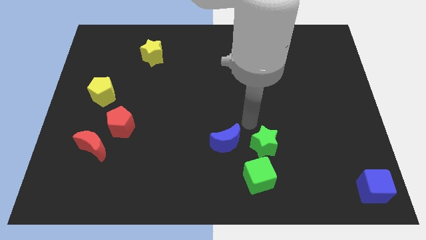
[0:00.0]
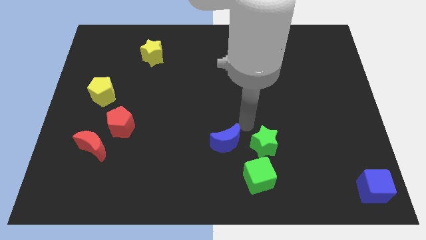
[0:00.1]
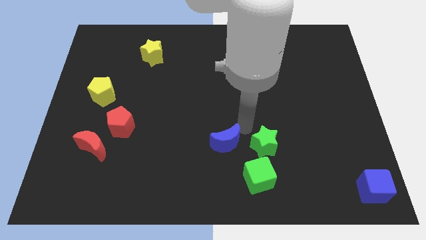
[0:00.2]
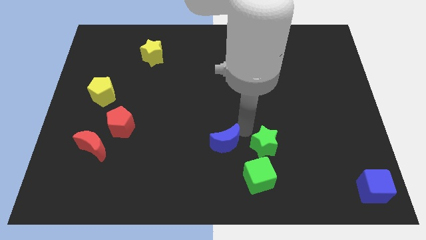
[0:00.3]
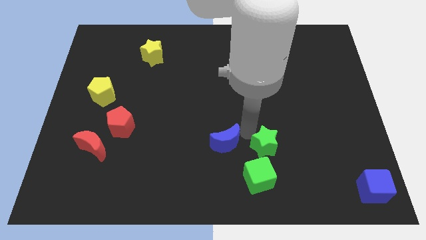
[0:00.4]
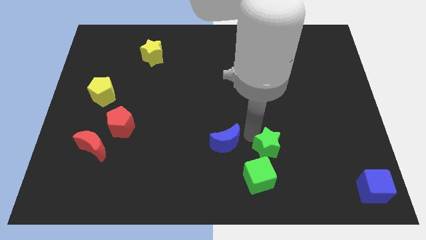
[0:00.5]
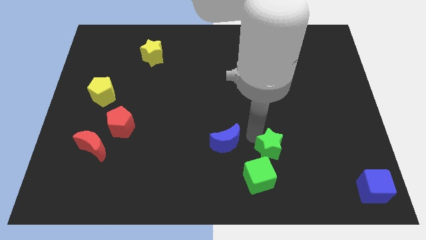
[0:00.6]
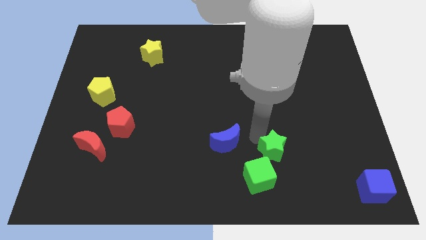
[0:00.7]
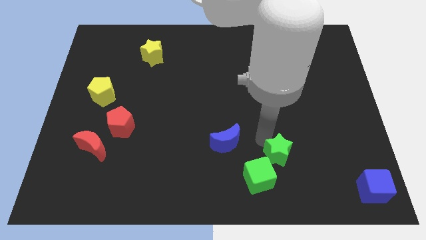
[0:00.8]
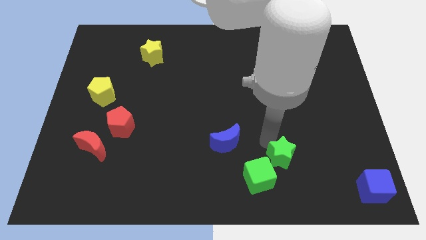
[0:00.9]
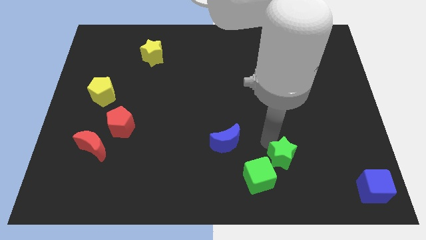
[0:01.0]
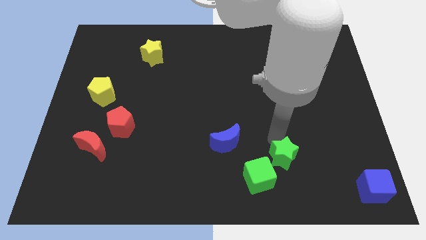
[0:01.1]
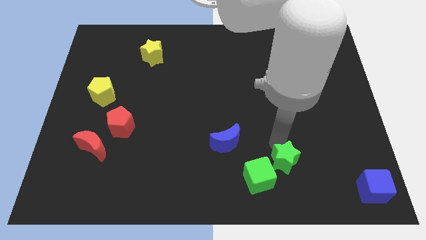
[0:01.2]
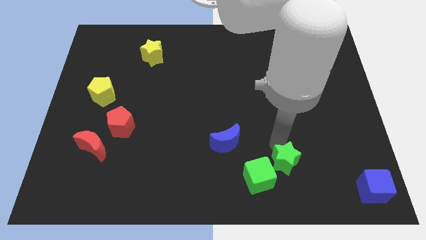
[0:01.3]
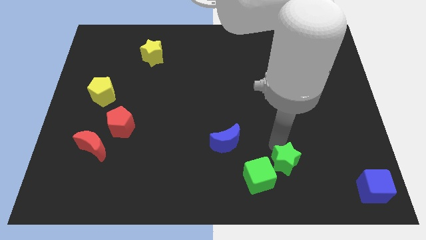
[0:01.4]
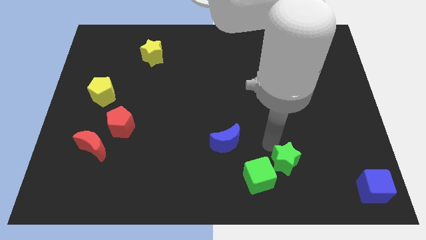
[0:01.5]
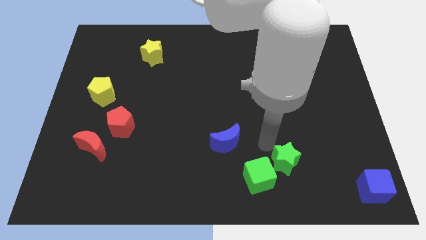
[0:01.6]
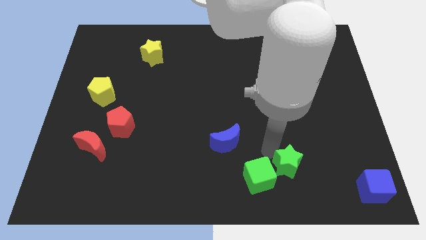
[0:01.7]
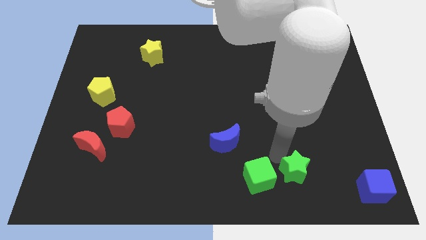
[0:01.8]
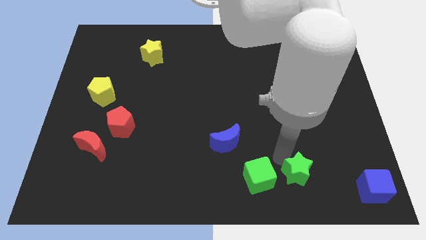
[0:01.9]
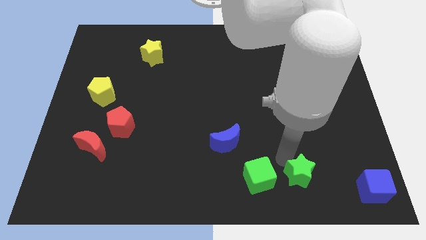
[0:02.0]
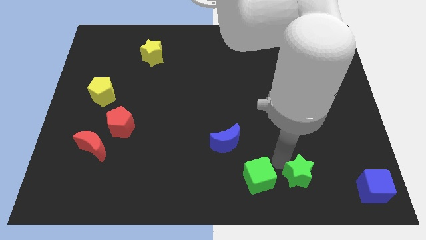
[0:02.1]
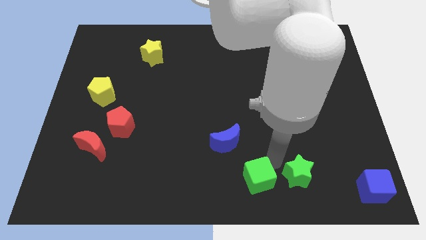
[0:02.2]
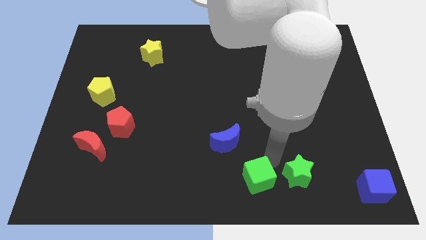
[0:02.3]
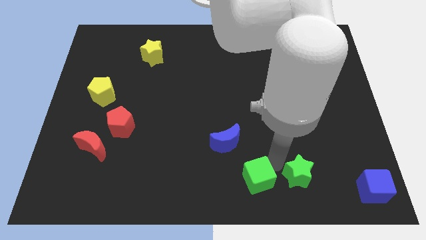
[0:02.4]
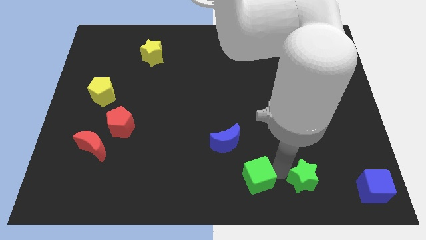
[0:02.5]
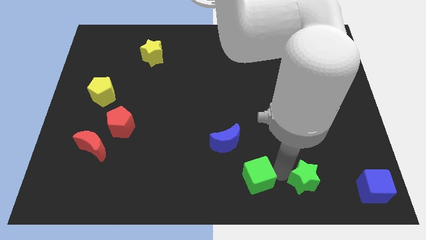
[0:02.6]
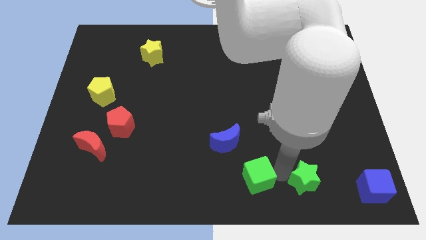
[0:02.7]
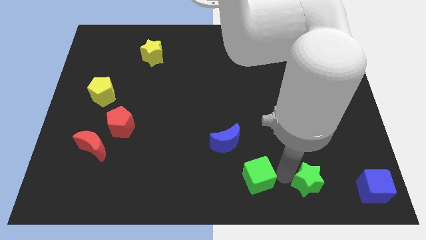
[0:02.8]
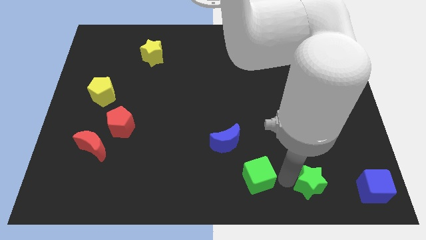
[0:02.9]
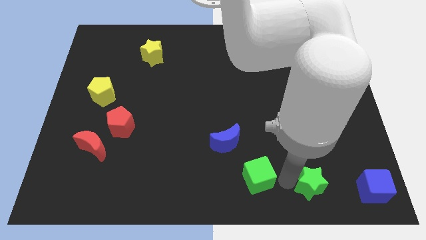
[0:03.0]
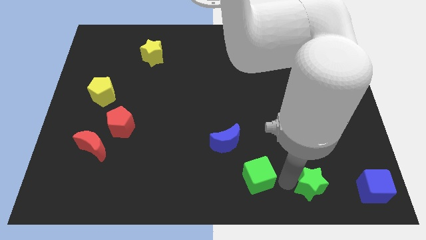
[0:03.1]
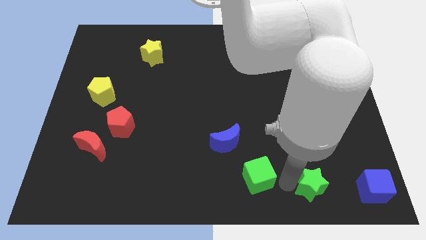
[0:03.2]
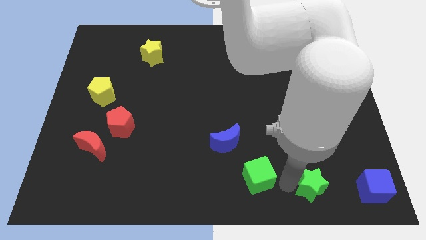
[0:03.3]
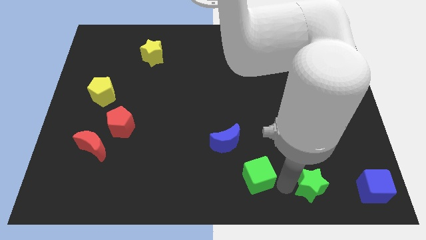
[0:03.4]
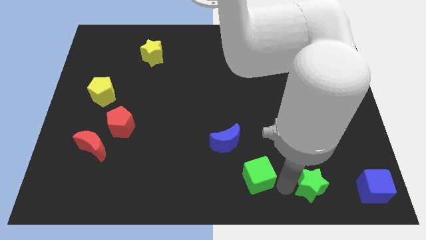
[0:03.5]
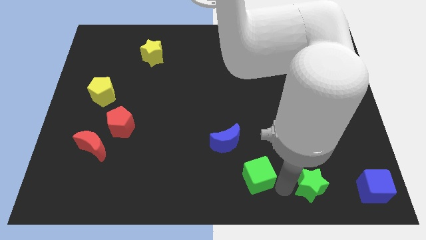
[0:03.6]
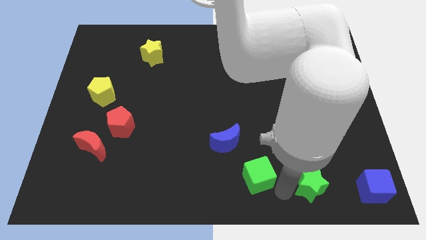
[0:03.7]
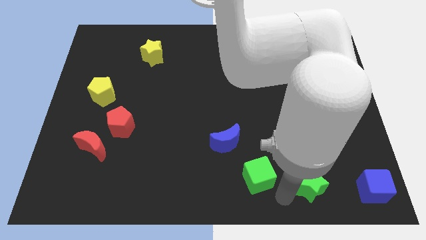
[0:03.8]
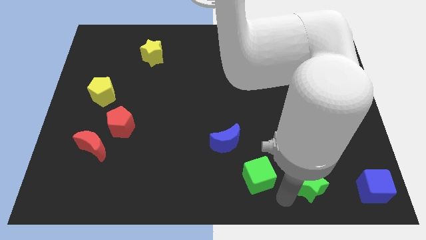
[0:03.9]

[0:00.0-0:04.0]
move green star to the left of blue cube

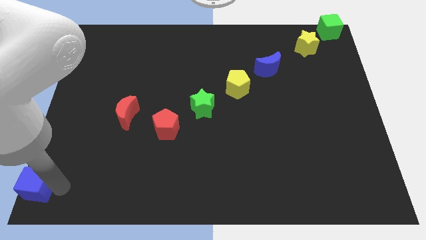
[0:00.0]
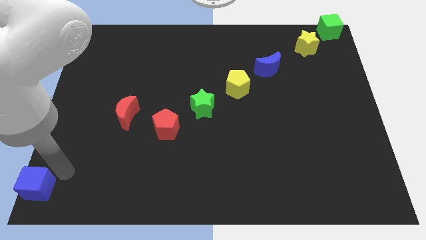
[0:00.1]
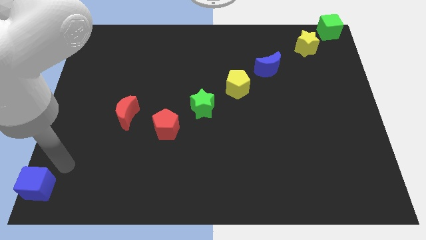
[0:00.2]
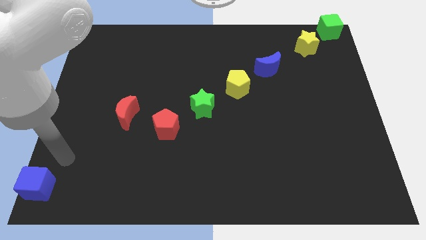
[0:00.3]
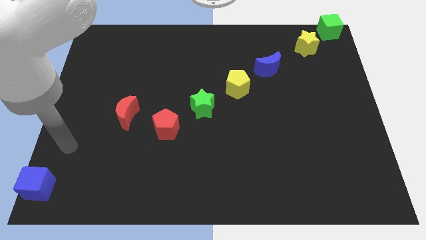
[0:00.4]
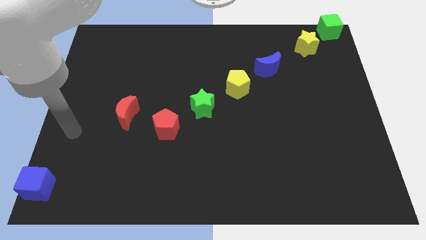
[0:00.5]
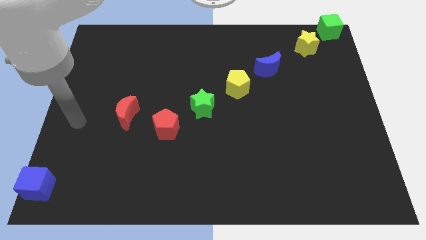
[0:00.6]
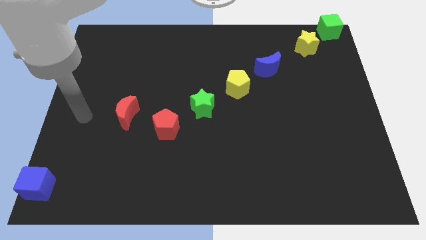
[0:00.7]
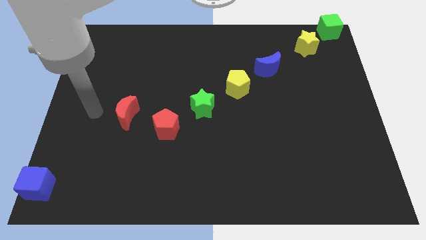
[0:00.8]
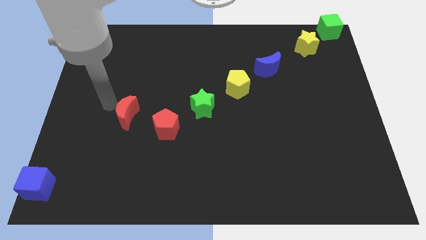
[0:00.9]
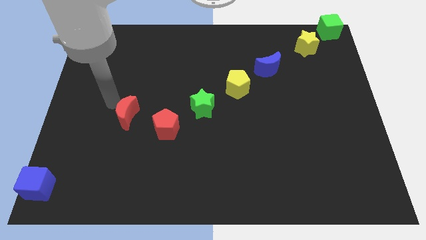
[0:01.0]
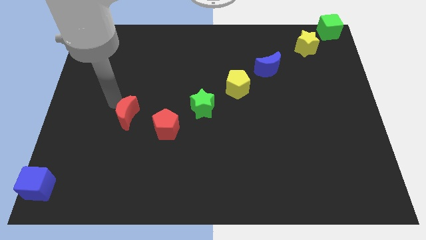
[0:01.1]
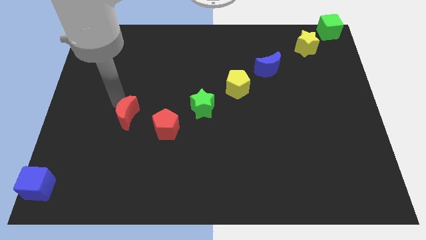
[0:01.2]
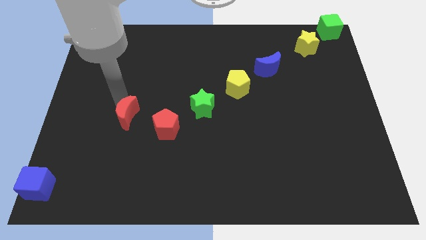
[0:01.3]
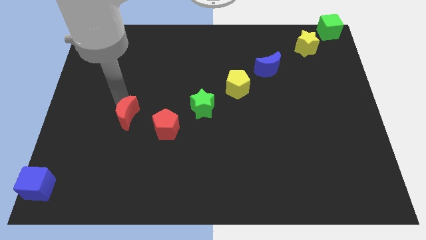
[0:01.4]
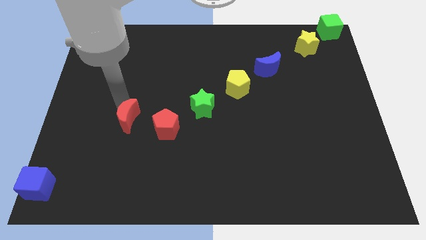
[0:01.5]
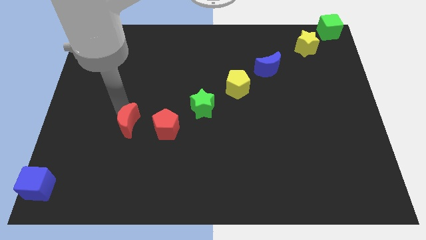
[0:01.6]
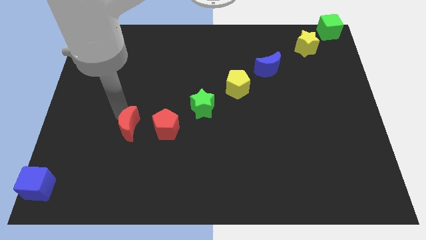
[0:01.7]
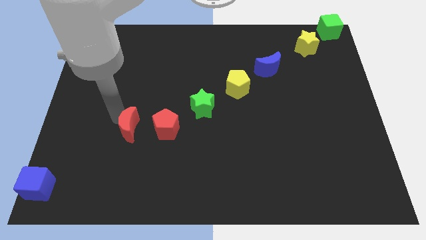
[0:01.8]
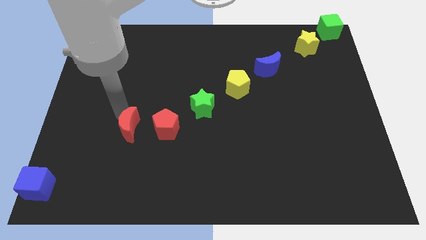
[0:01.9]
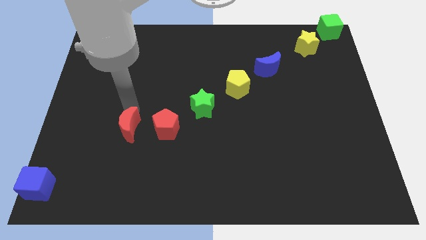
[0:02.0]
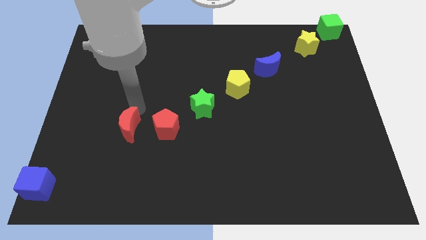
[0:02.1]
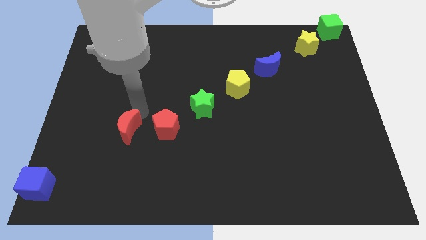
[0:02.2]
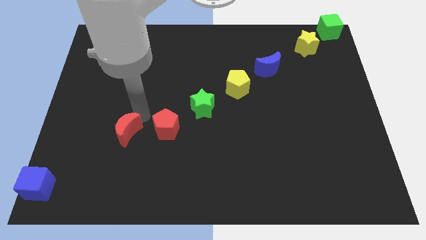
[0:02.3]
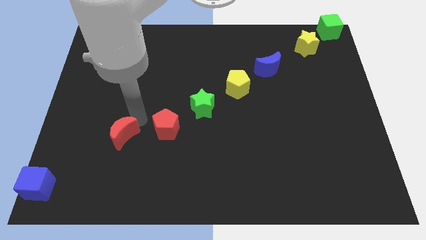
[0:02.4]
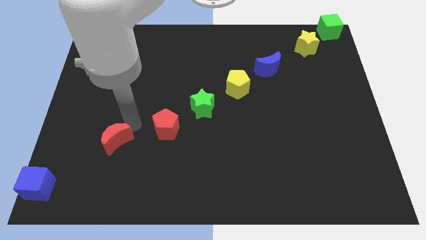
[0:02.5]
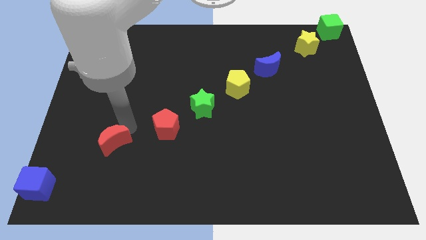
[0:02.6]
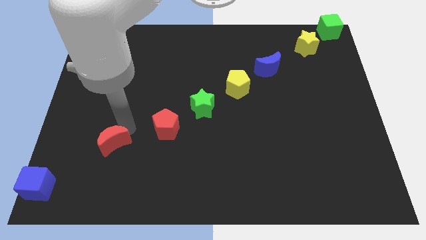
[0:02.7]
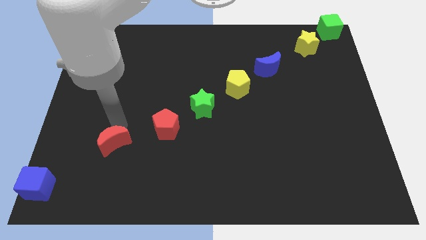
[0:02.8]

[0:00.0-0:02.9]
move the red crescent parallel to the left of red pentagon

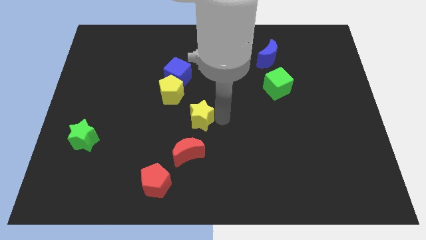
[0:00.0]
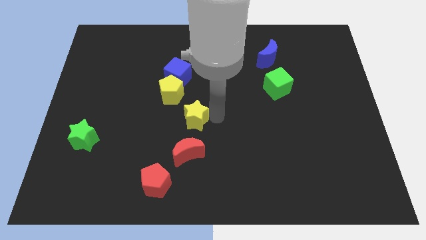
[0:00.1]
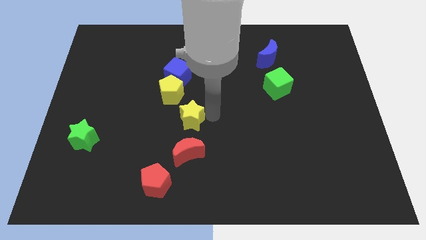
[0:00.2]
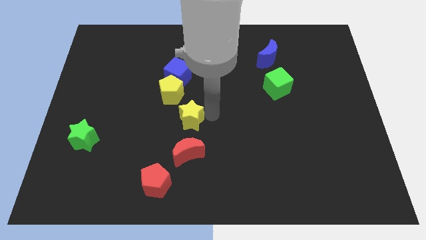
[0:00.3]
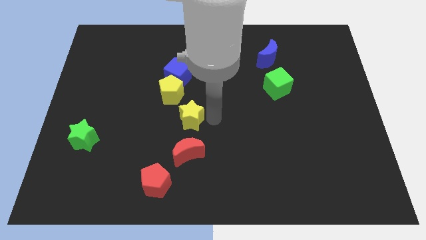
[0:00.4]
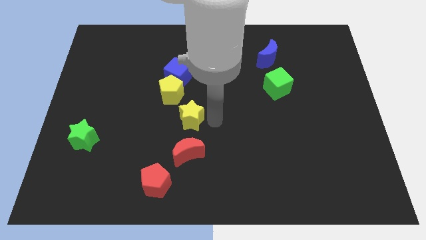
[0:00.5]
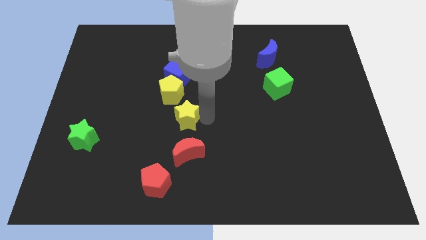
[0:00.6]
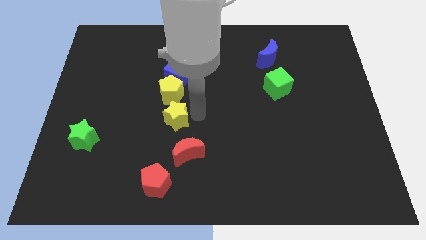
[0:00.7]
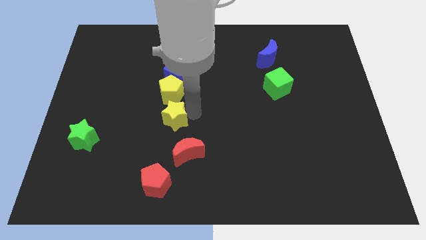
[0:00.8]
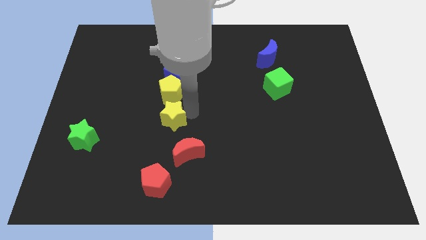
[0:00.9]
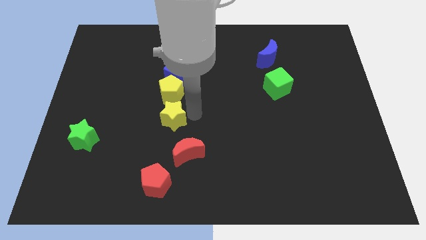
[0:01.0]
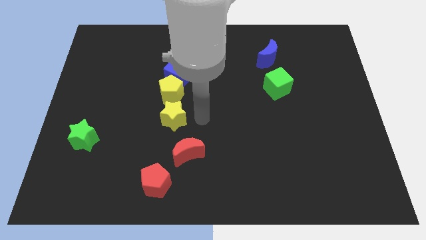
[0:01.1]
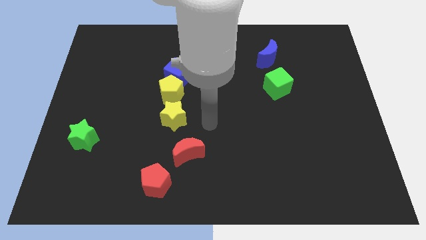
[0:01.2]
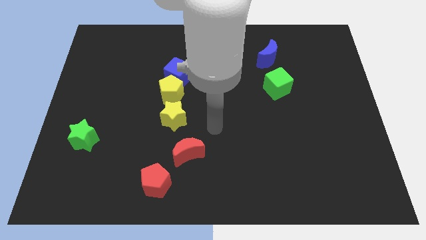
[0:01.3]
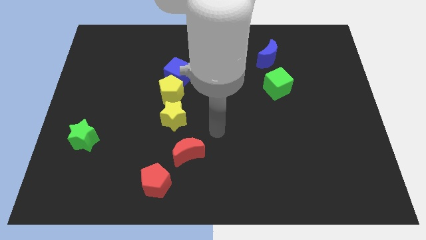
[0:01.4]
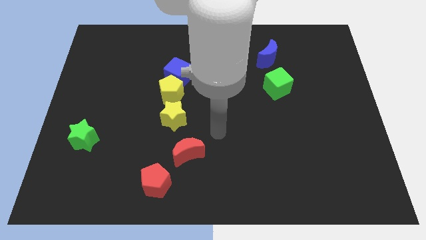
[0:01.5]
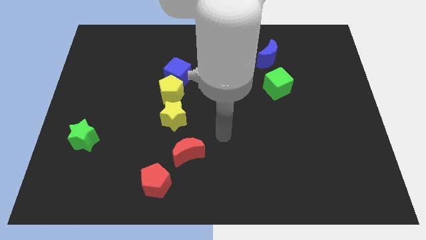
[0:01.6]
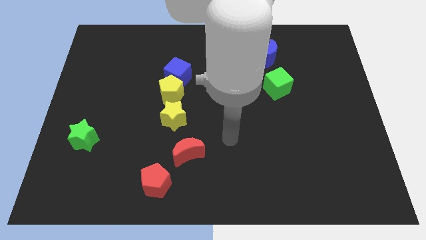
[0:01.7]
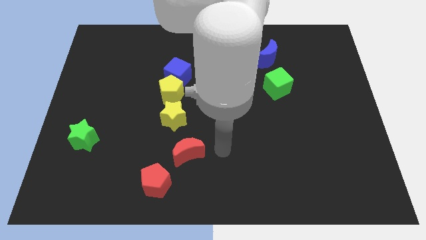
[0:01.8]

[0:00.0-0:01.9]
move yellow star near yellow pentagon
